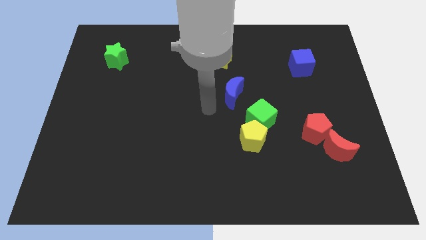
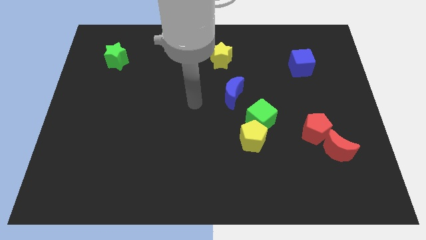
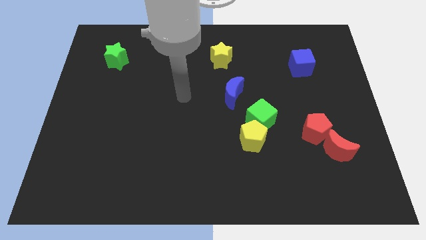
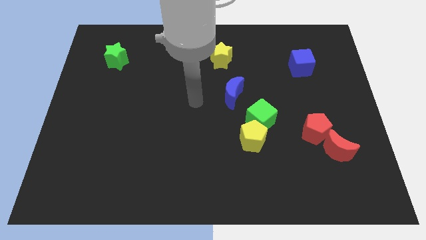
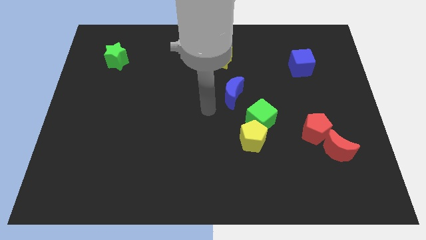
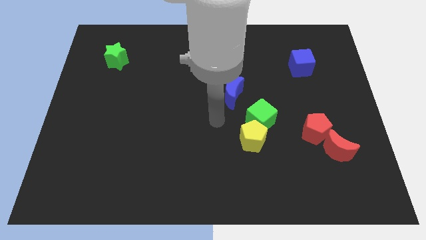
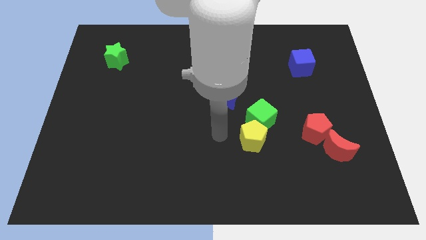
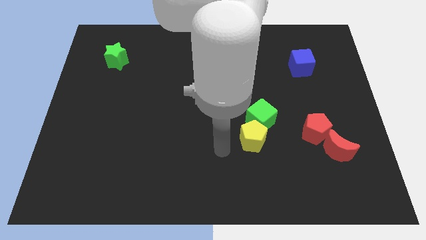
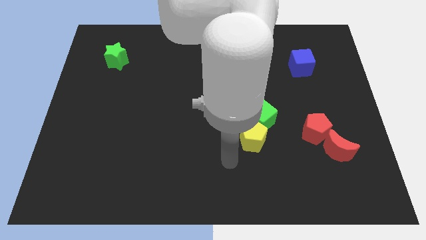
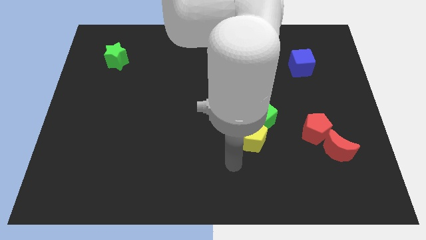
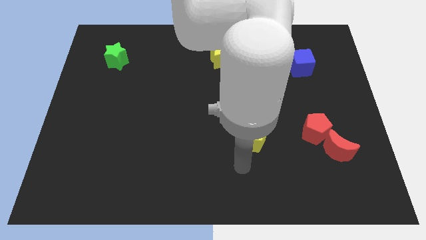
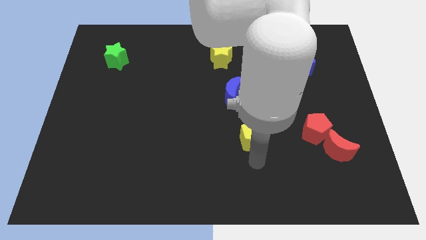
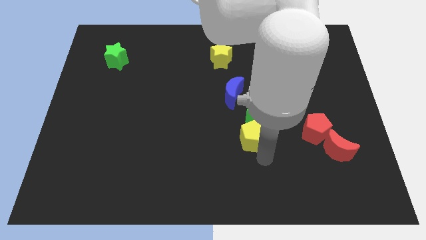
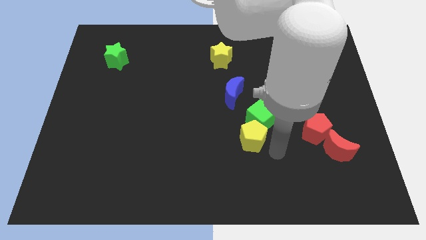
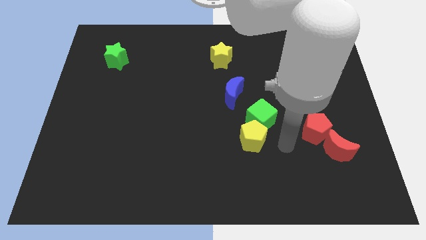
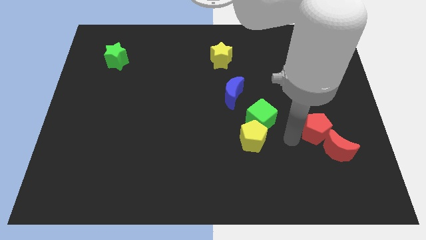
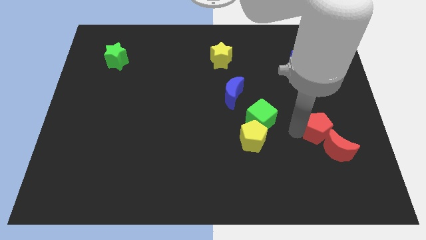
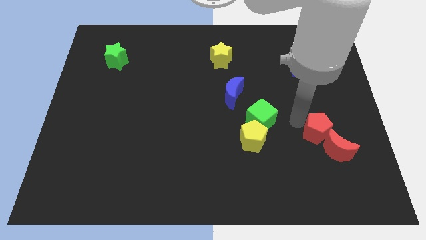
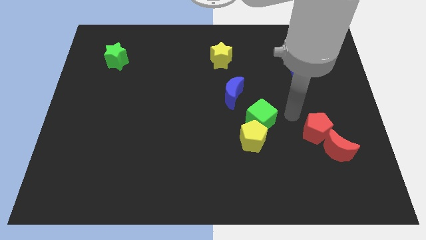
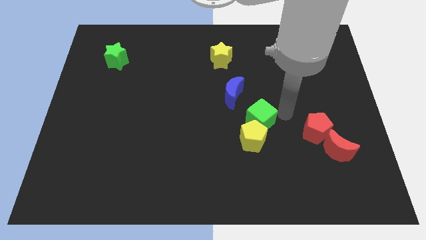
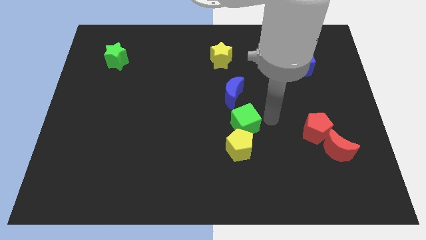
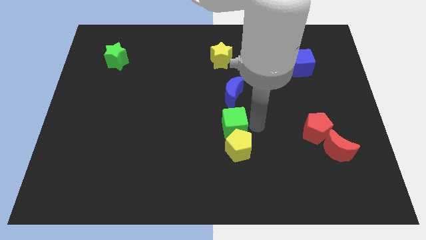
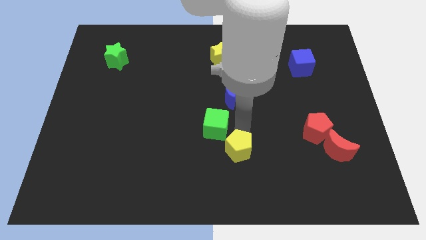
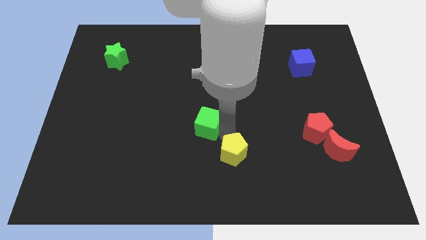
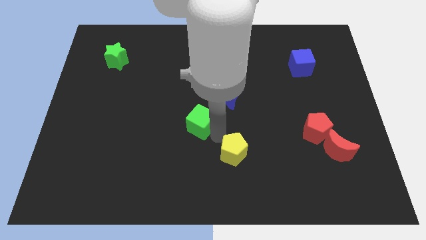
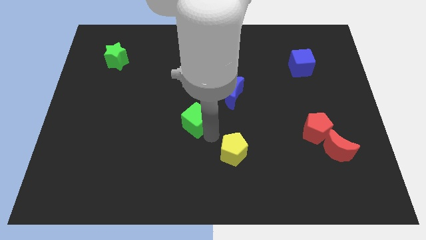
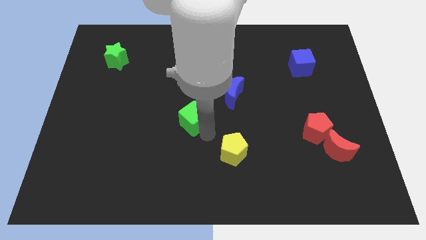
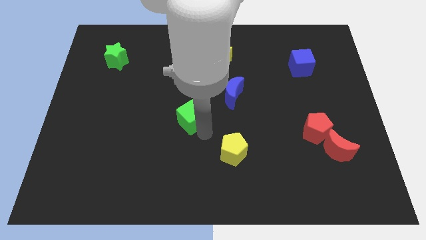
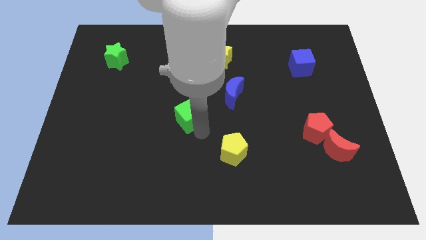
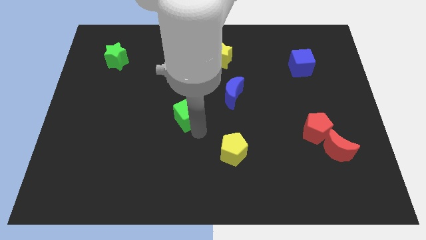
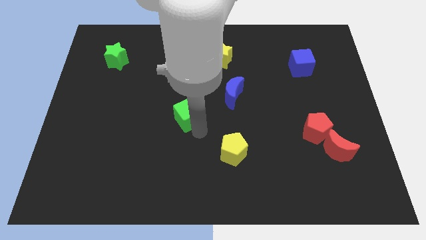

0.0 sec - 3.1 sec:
push the green cube to the left side slightly

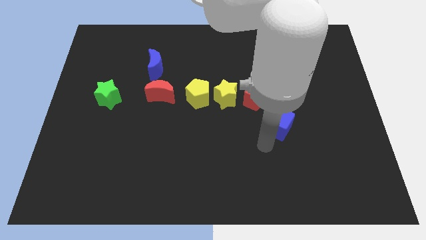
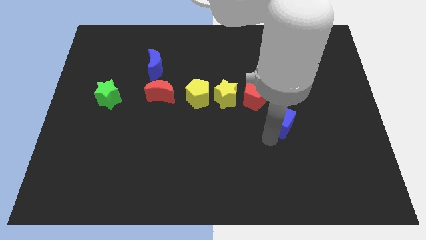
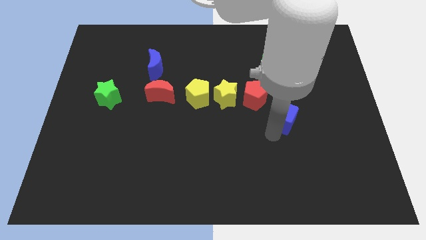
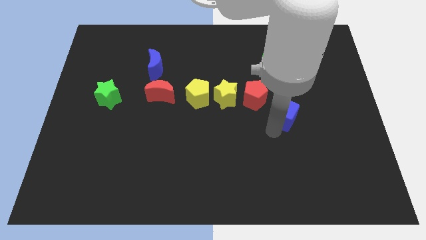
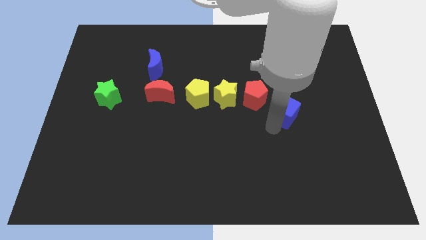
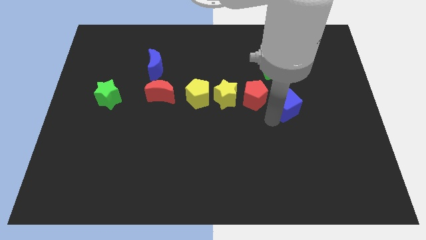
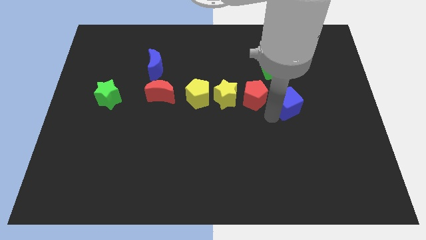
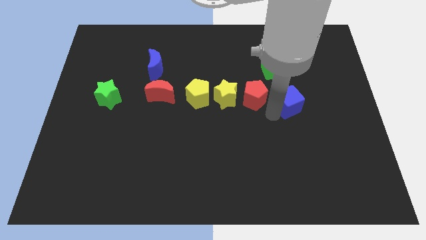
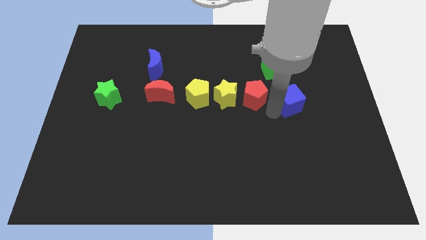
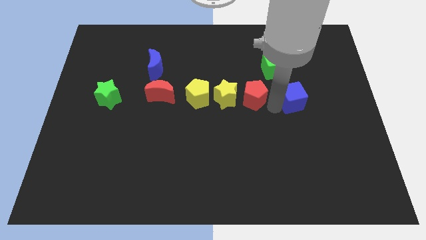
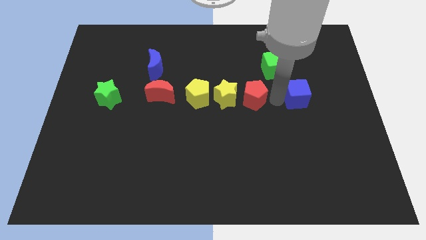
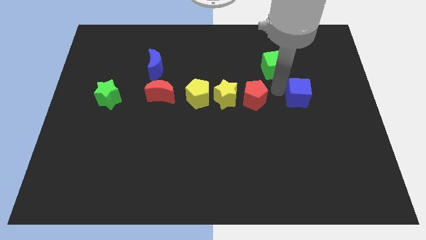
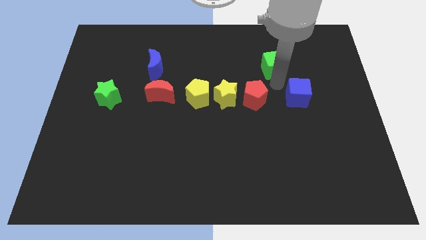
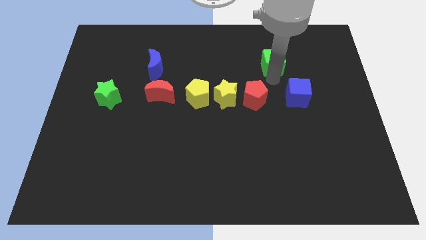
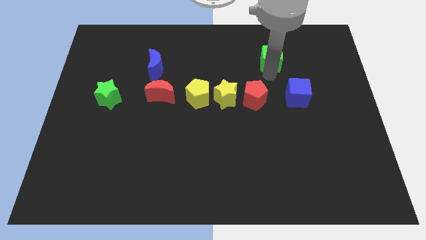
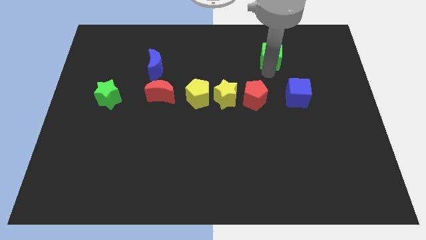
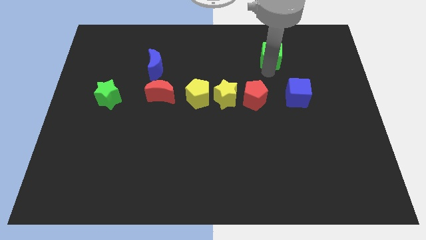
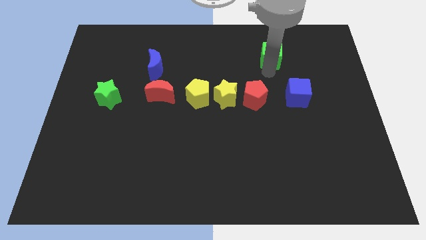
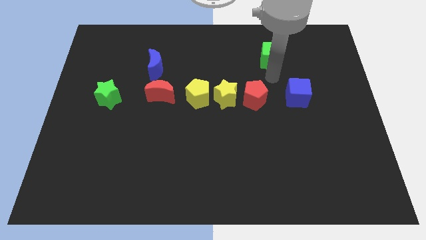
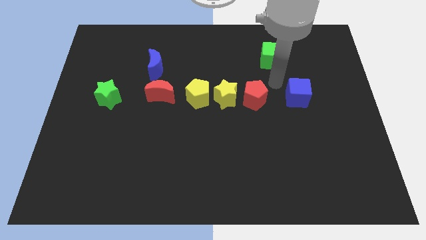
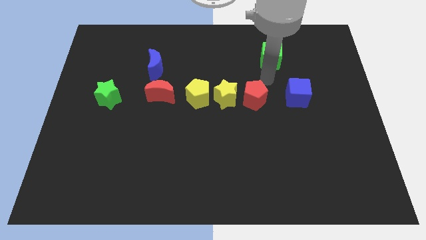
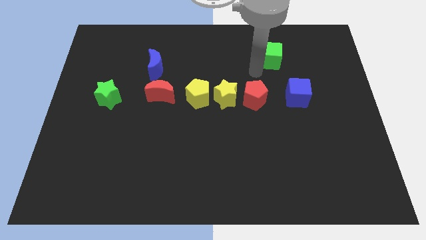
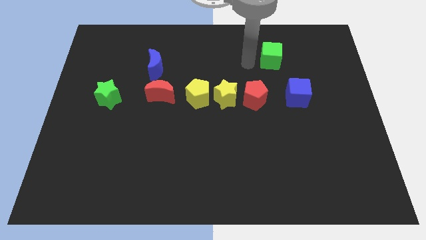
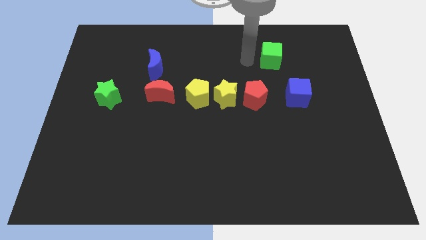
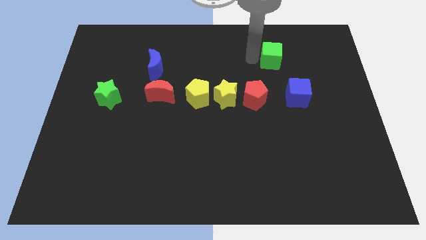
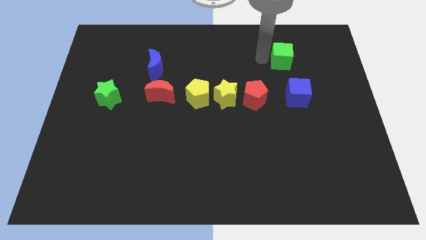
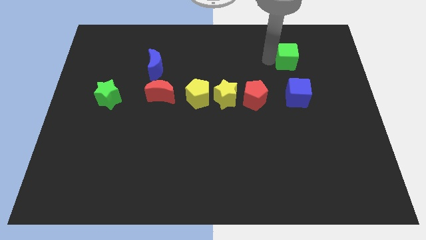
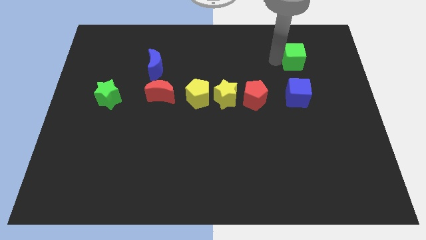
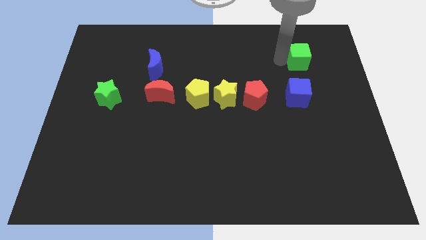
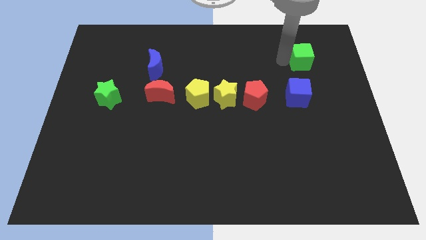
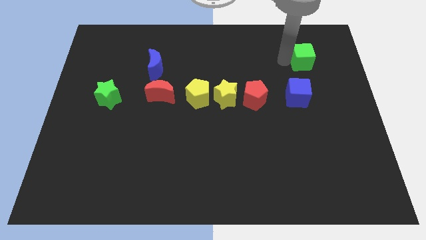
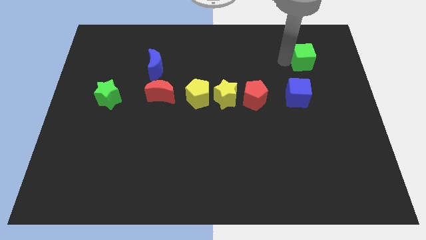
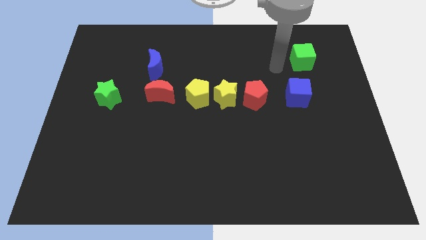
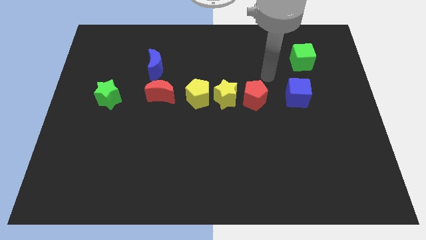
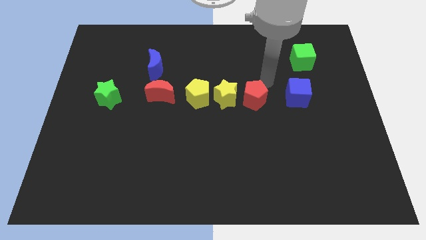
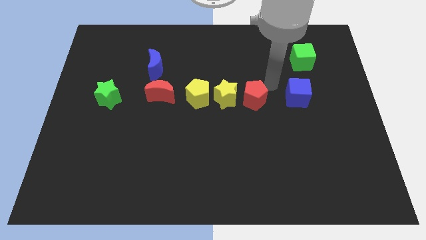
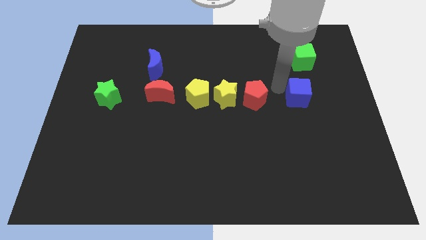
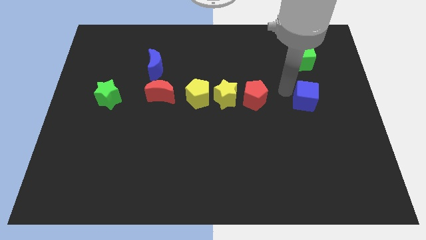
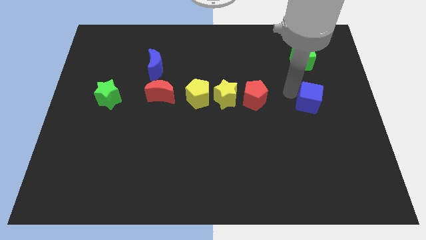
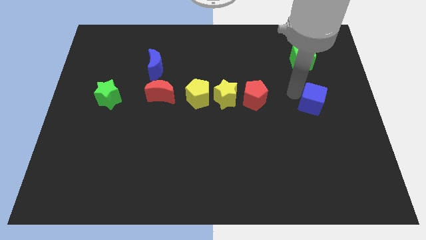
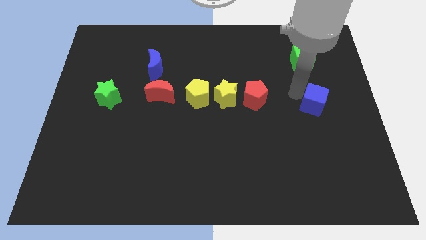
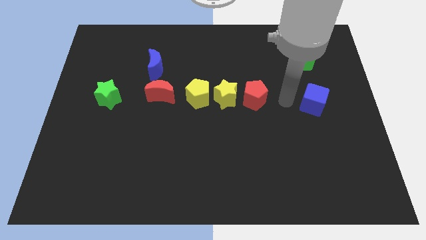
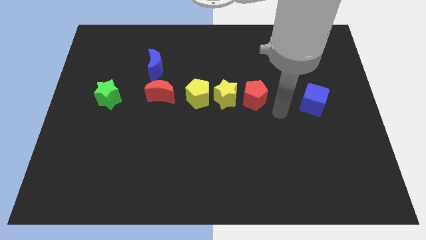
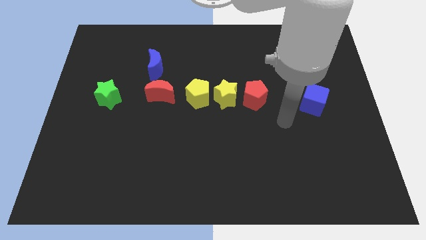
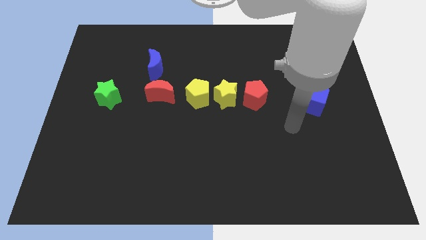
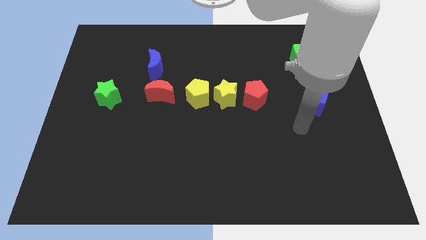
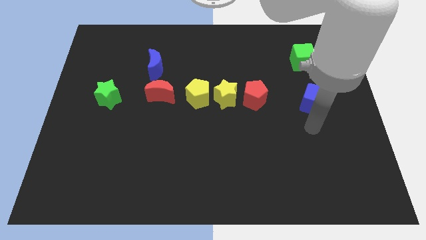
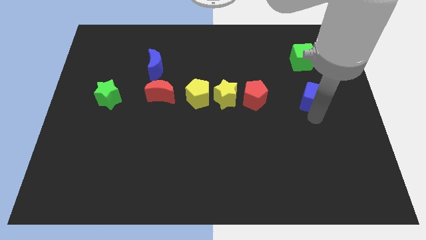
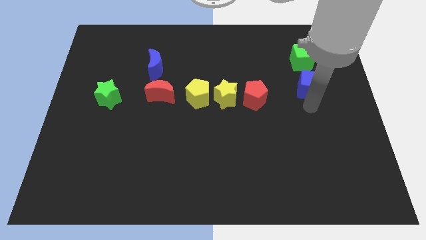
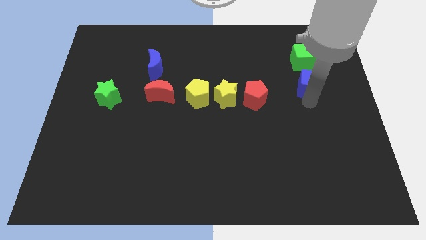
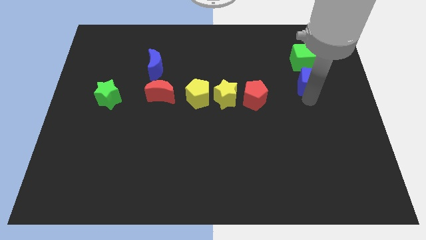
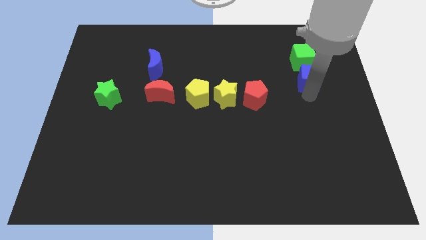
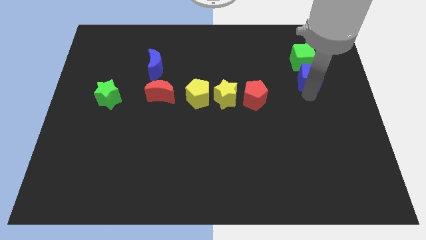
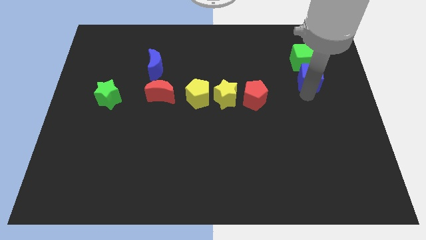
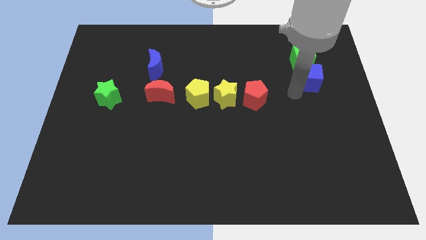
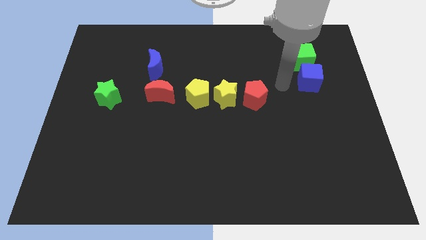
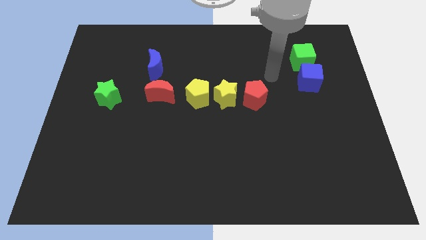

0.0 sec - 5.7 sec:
place the green and blue cubes in a line vertically

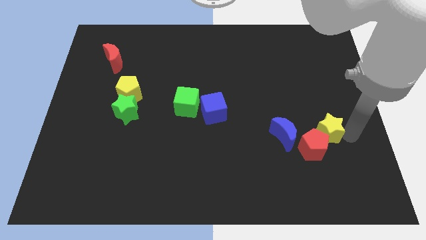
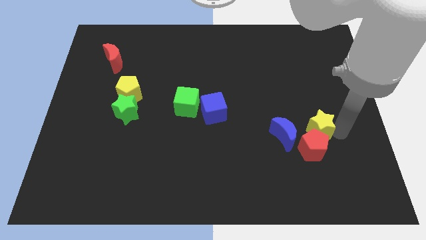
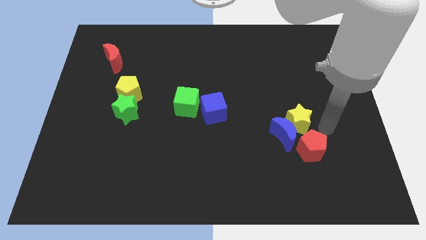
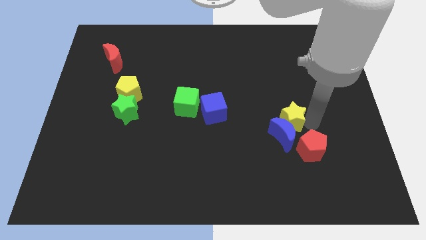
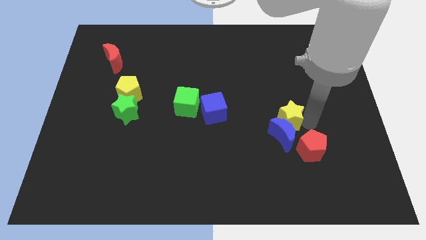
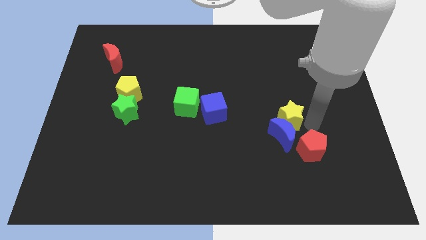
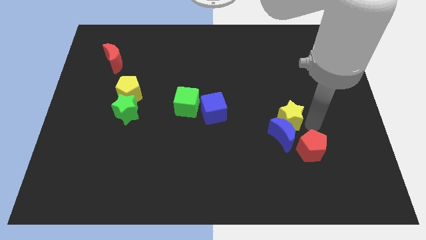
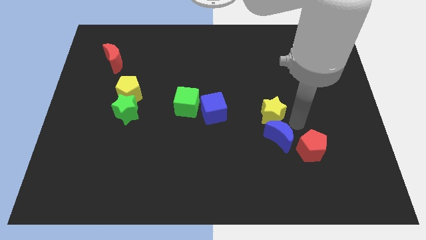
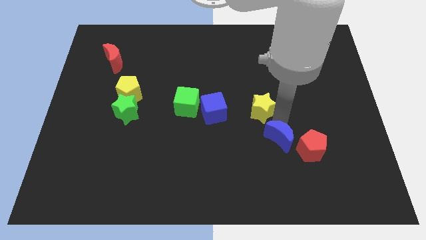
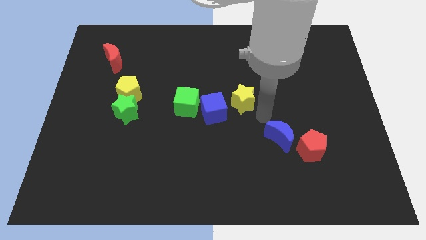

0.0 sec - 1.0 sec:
move yellow star towards blue cube
